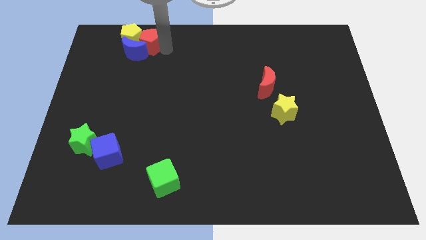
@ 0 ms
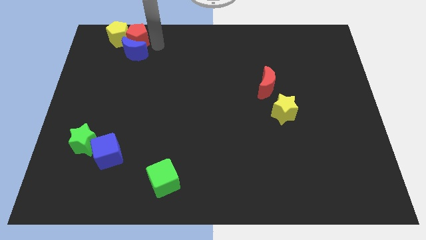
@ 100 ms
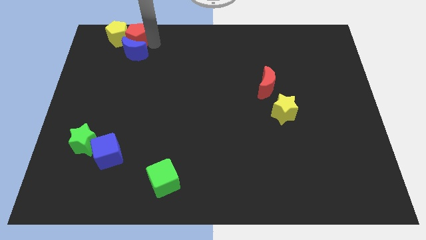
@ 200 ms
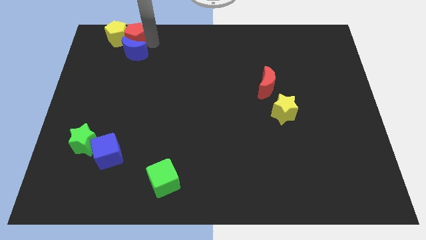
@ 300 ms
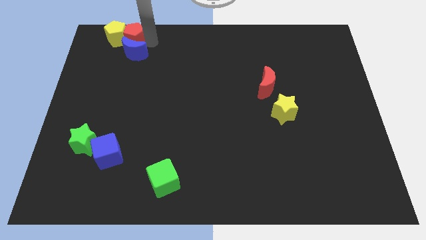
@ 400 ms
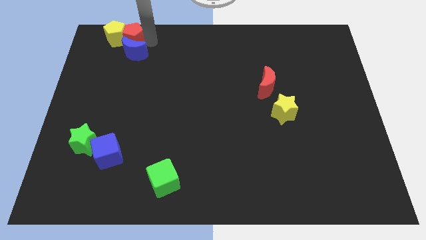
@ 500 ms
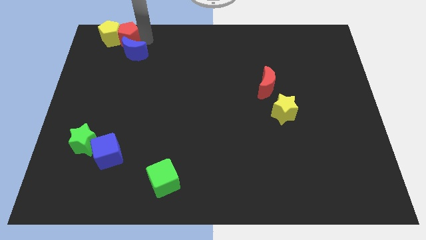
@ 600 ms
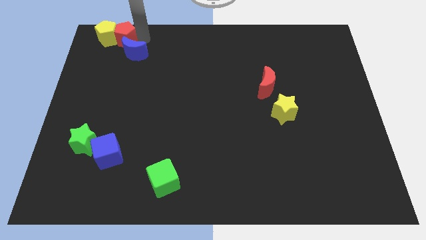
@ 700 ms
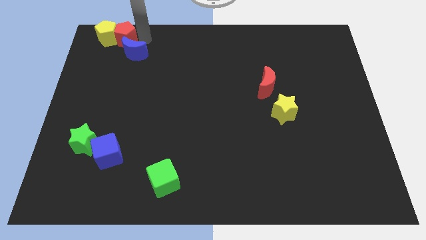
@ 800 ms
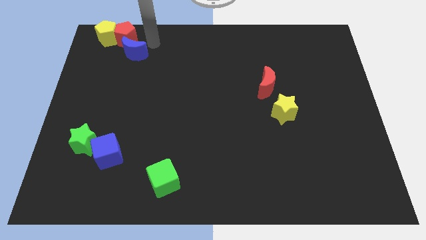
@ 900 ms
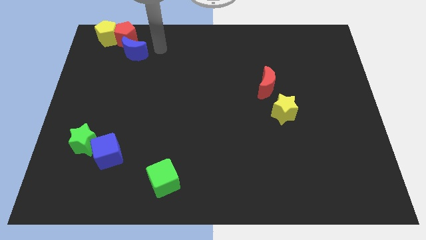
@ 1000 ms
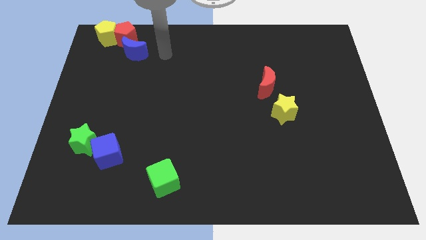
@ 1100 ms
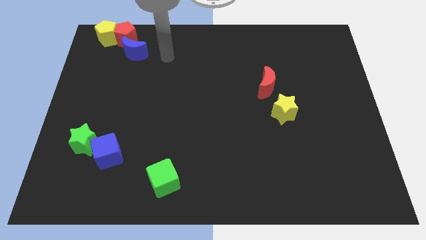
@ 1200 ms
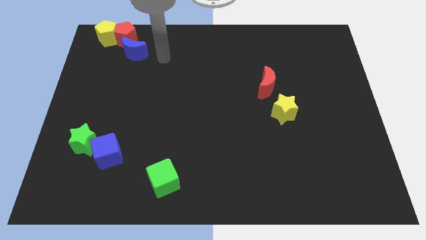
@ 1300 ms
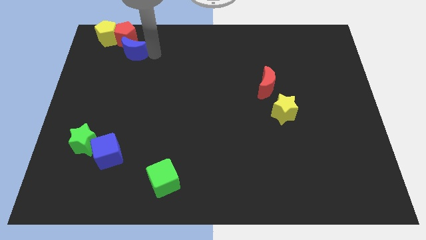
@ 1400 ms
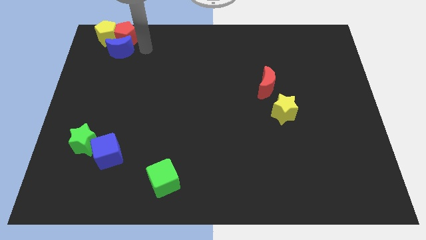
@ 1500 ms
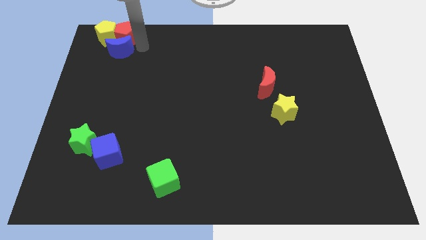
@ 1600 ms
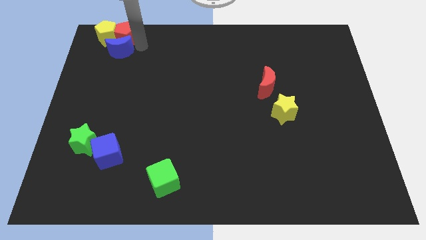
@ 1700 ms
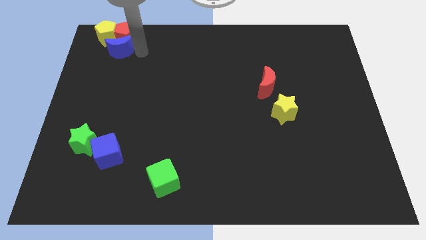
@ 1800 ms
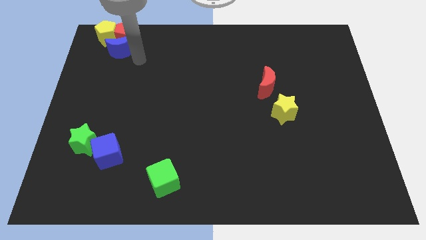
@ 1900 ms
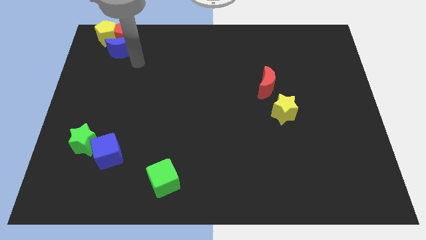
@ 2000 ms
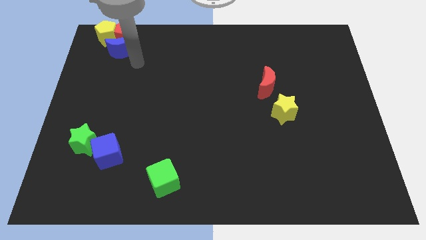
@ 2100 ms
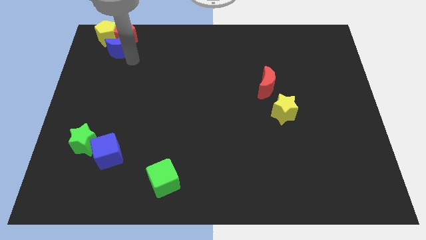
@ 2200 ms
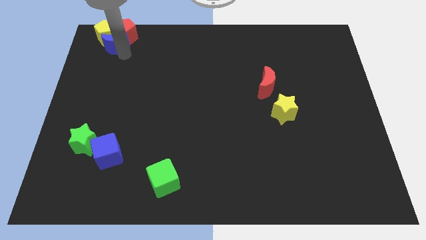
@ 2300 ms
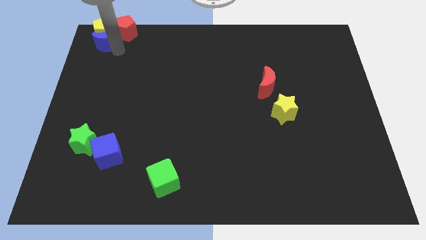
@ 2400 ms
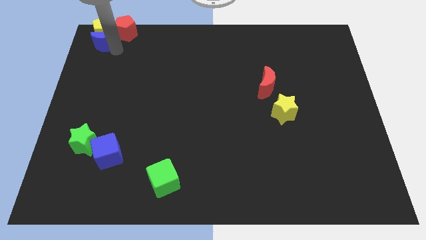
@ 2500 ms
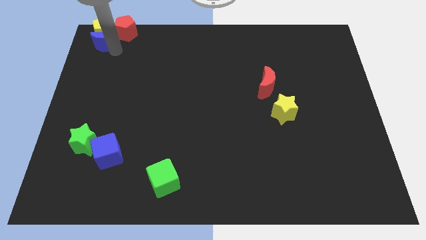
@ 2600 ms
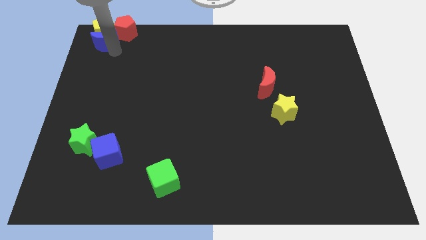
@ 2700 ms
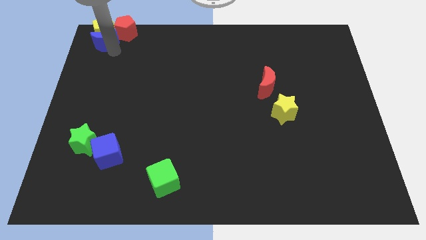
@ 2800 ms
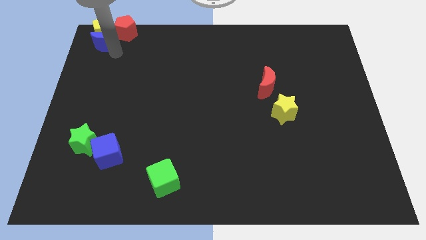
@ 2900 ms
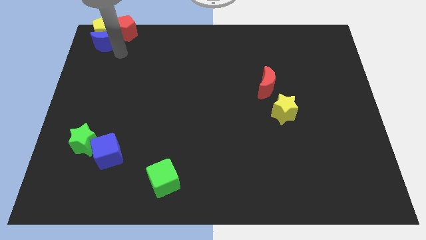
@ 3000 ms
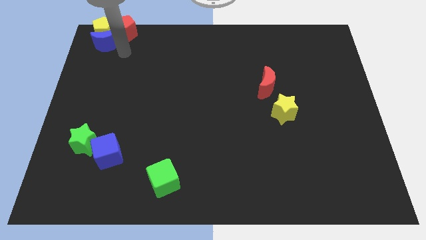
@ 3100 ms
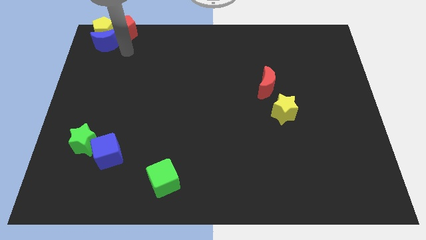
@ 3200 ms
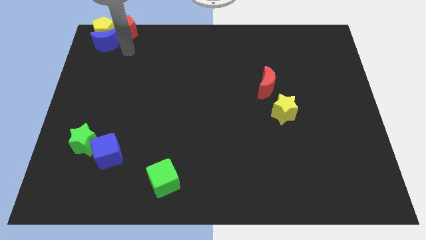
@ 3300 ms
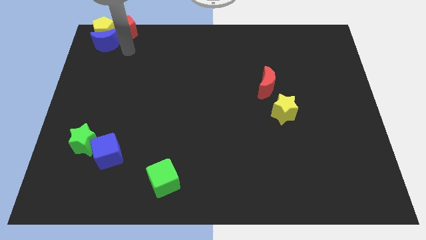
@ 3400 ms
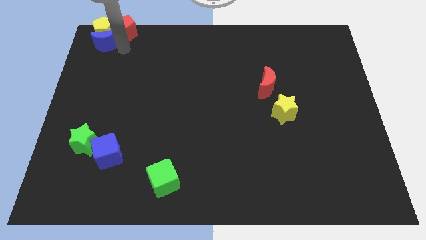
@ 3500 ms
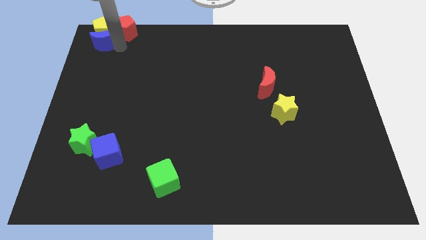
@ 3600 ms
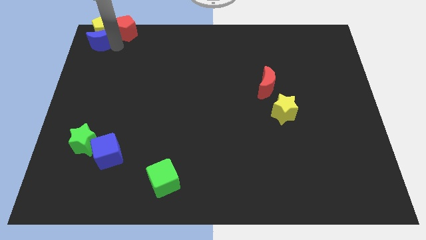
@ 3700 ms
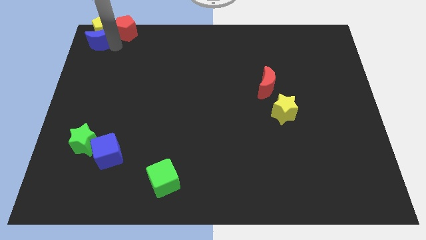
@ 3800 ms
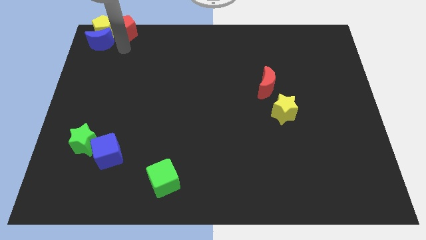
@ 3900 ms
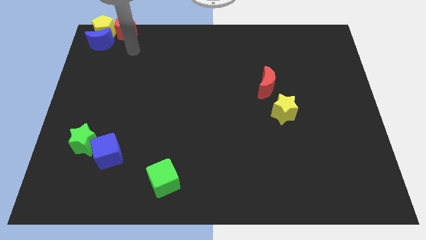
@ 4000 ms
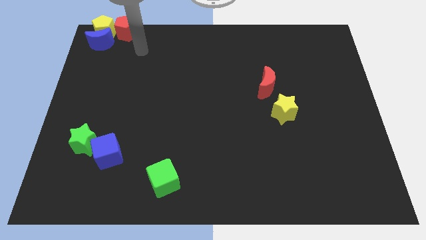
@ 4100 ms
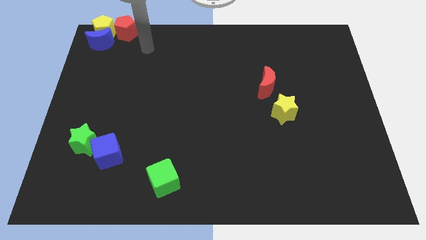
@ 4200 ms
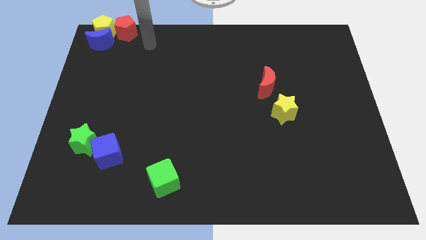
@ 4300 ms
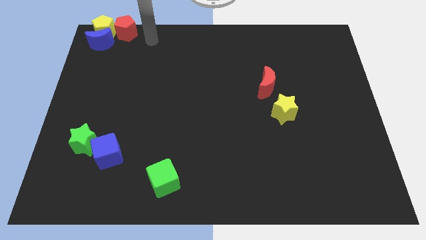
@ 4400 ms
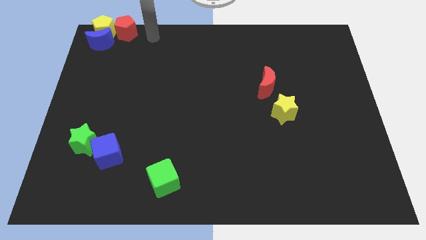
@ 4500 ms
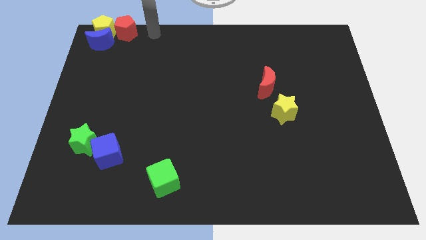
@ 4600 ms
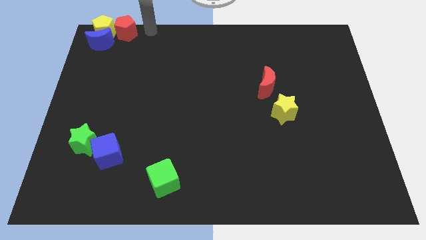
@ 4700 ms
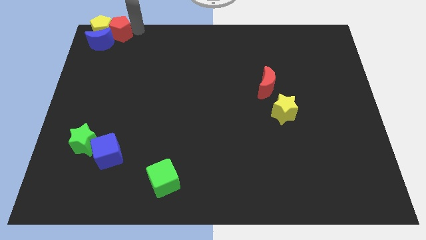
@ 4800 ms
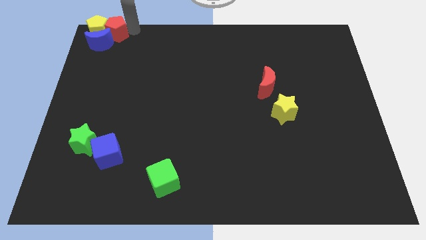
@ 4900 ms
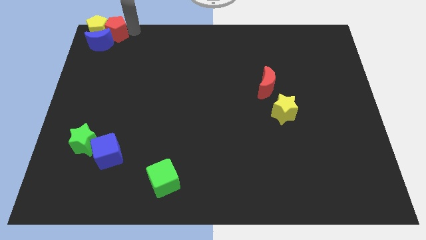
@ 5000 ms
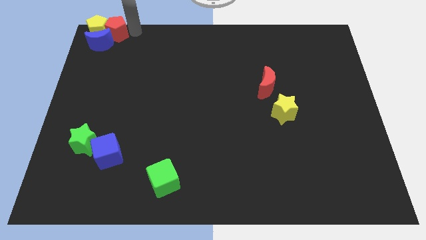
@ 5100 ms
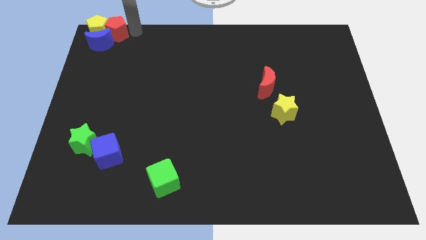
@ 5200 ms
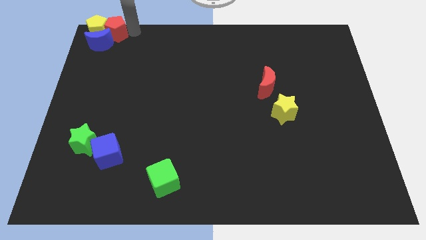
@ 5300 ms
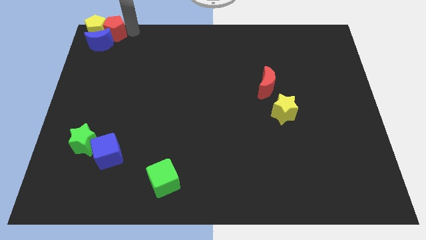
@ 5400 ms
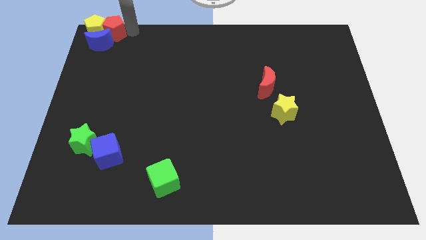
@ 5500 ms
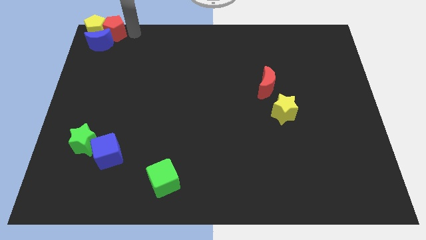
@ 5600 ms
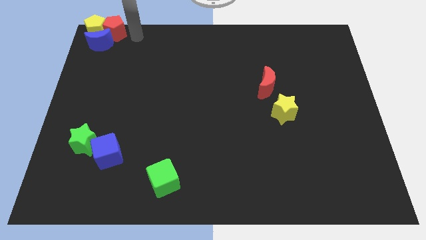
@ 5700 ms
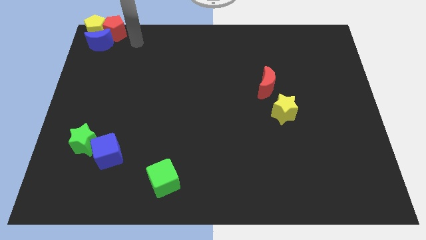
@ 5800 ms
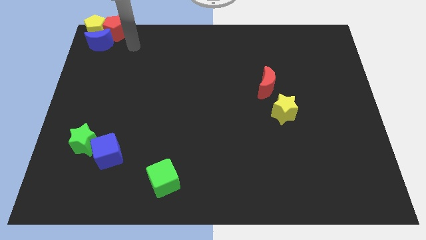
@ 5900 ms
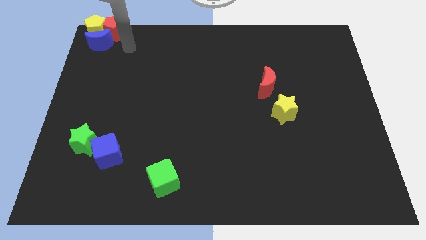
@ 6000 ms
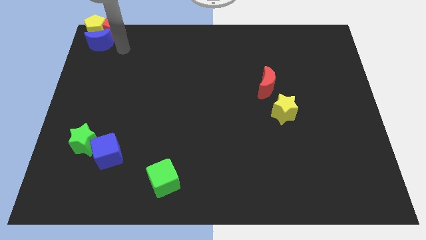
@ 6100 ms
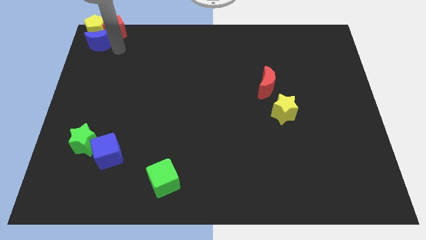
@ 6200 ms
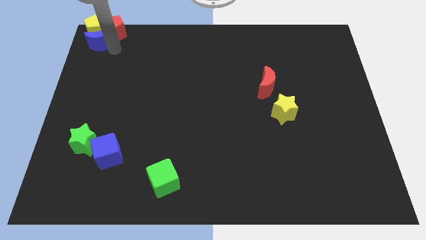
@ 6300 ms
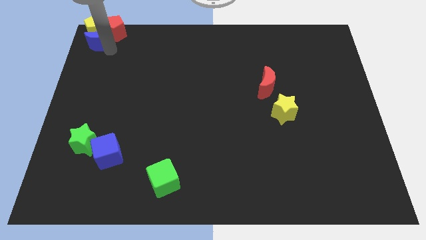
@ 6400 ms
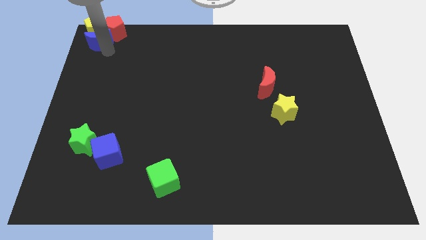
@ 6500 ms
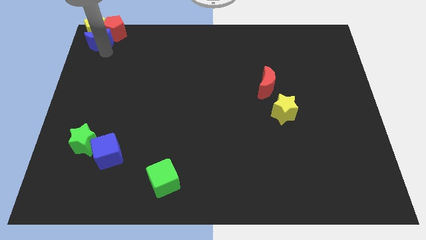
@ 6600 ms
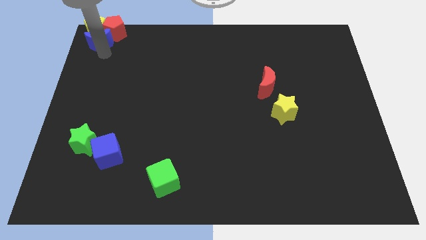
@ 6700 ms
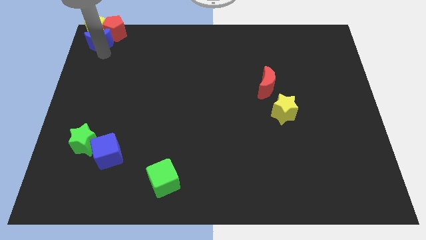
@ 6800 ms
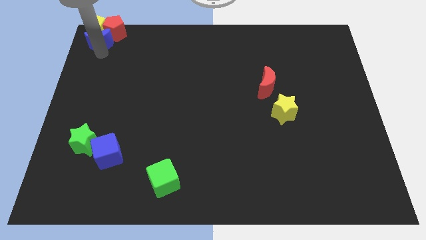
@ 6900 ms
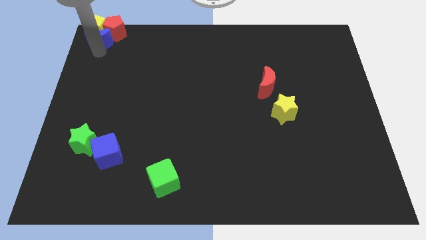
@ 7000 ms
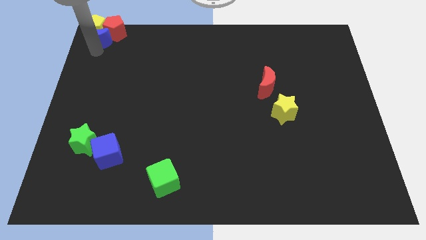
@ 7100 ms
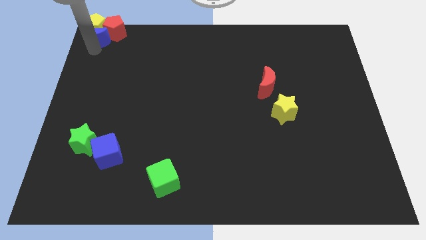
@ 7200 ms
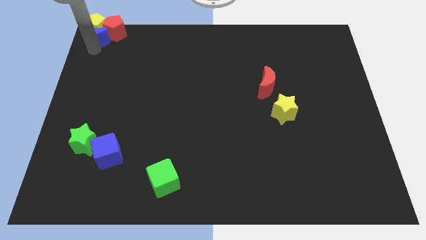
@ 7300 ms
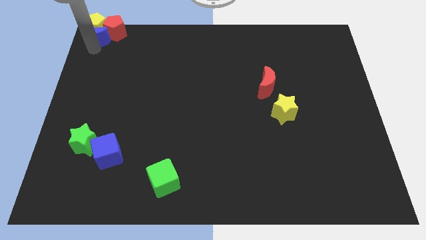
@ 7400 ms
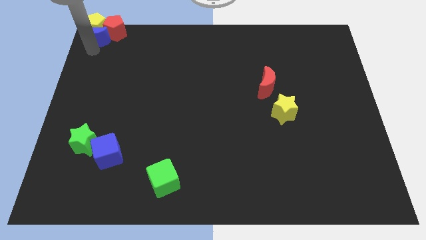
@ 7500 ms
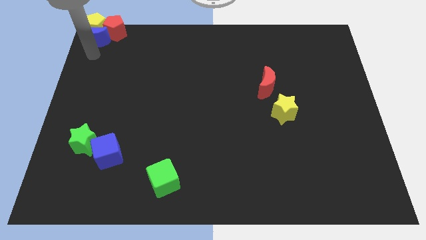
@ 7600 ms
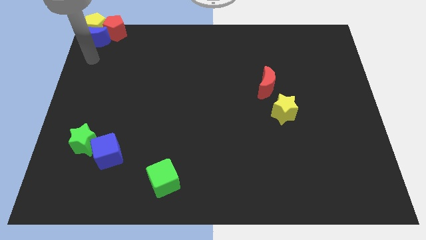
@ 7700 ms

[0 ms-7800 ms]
move red pentagon yellow pentagon and blue moon to the top left corner

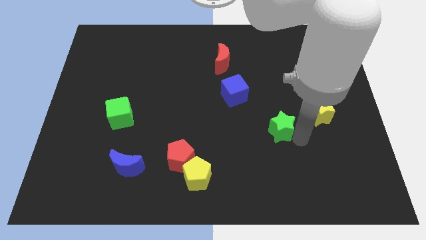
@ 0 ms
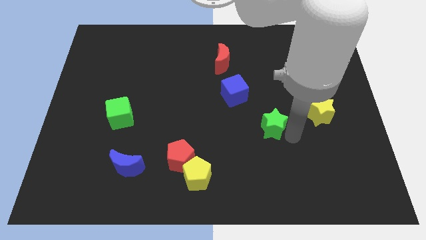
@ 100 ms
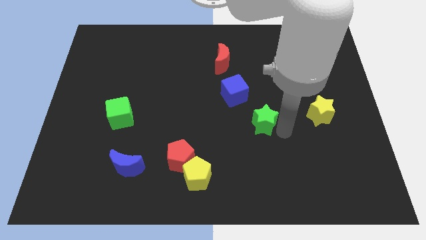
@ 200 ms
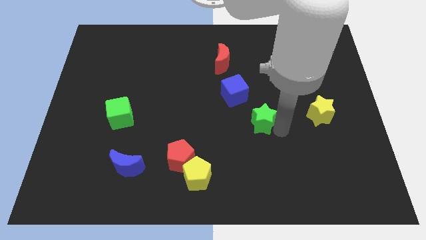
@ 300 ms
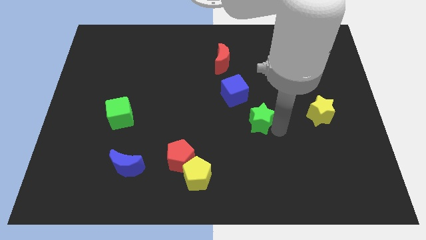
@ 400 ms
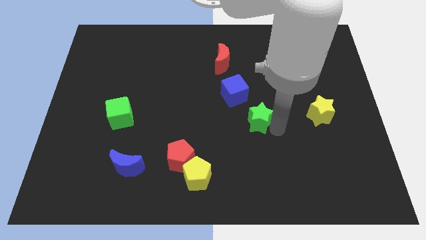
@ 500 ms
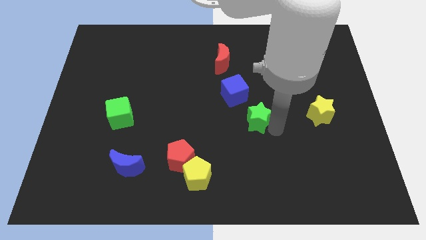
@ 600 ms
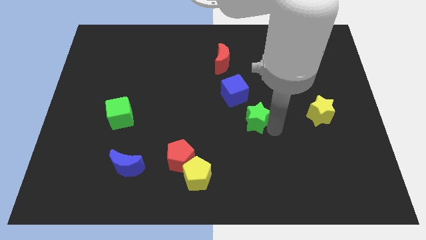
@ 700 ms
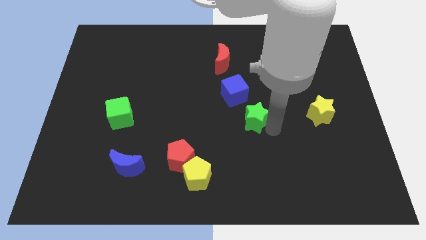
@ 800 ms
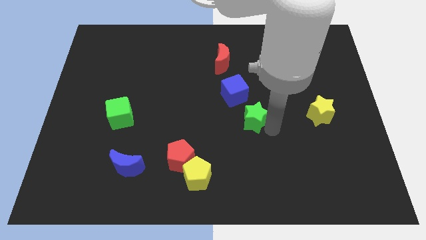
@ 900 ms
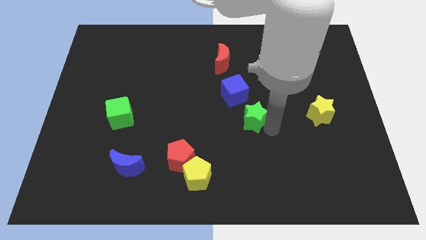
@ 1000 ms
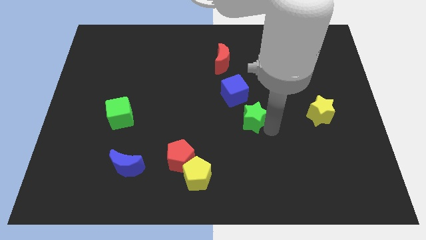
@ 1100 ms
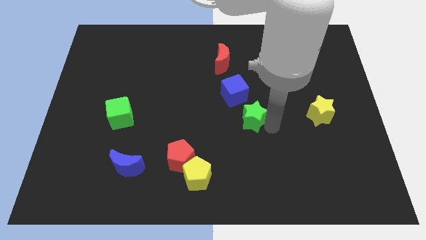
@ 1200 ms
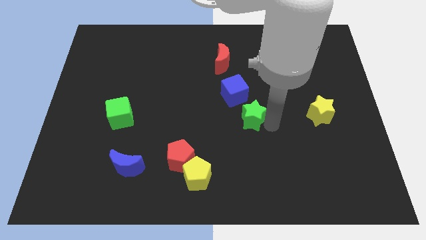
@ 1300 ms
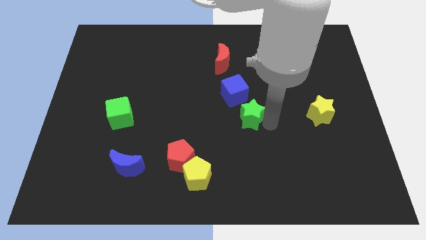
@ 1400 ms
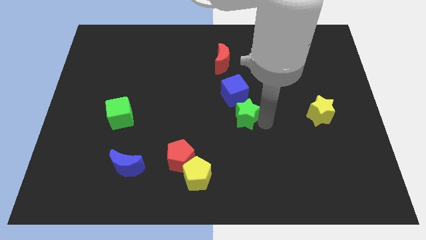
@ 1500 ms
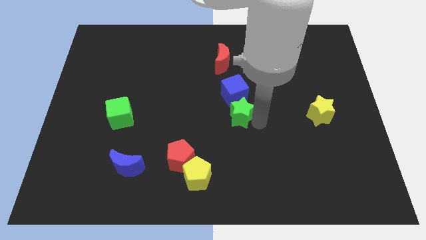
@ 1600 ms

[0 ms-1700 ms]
move the green star to the bottom of blue cube
